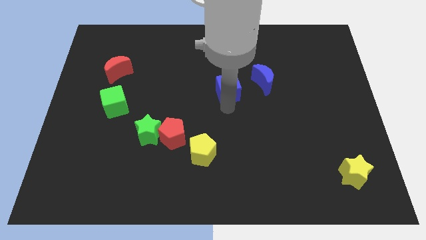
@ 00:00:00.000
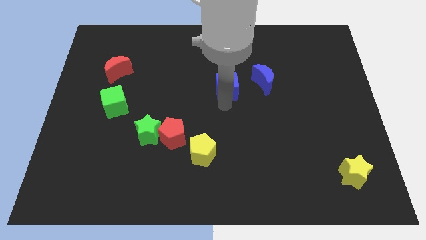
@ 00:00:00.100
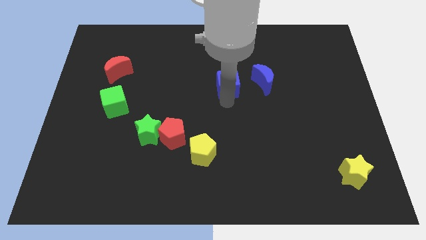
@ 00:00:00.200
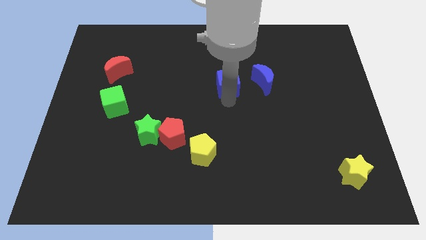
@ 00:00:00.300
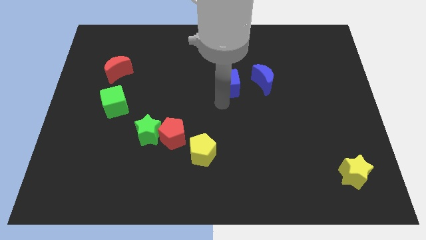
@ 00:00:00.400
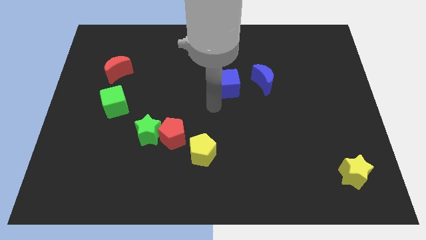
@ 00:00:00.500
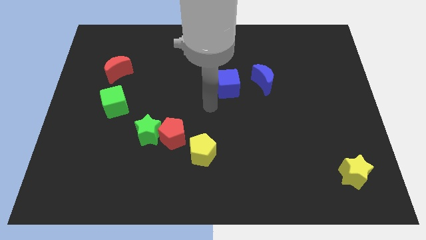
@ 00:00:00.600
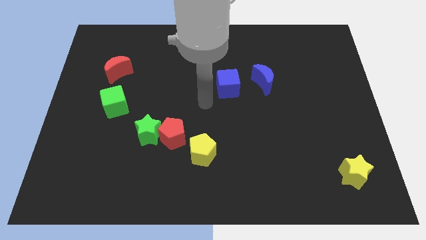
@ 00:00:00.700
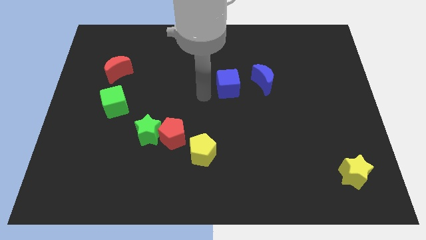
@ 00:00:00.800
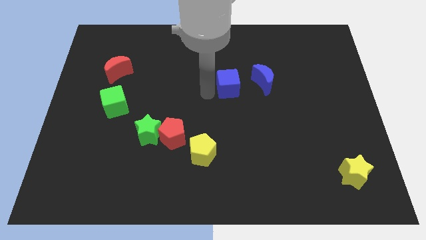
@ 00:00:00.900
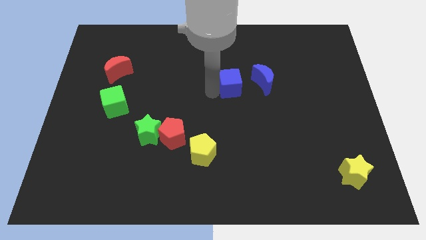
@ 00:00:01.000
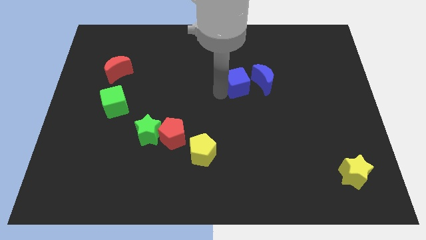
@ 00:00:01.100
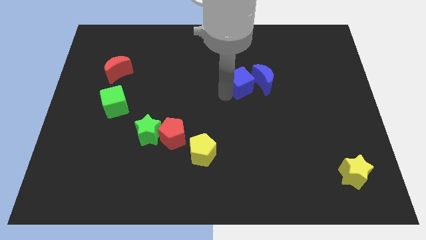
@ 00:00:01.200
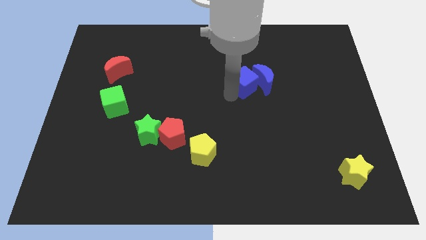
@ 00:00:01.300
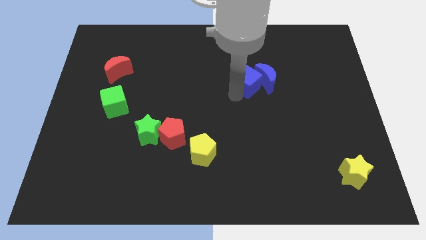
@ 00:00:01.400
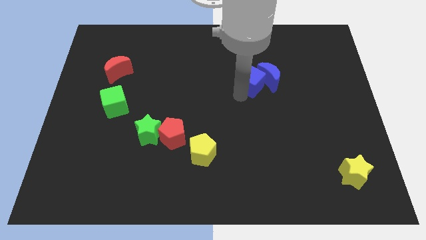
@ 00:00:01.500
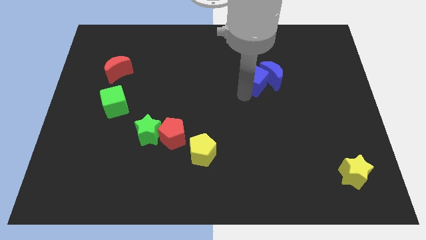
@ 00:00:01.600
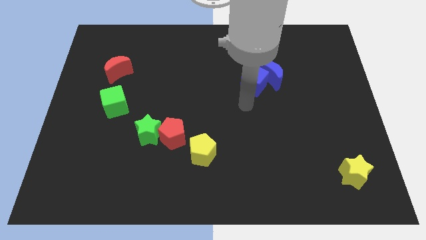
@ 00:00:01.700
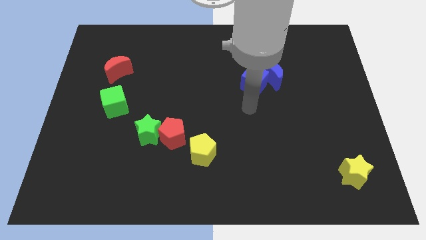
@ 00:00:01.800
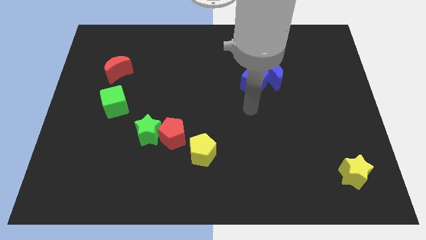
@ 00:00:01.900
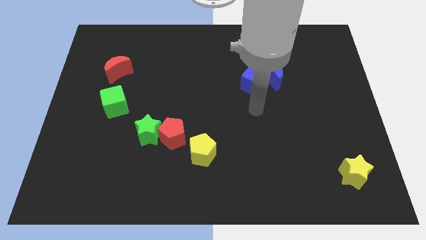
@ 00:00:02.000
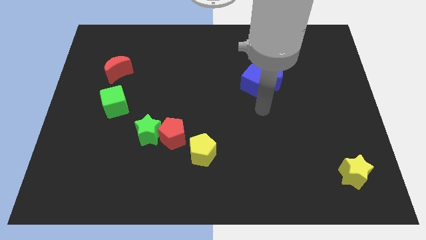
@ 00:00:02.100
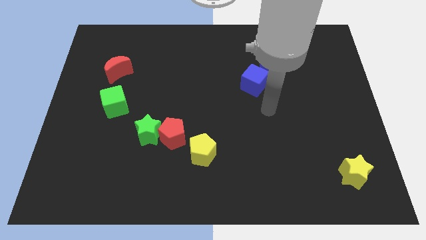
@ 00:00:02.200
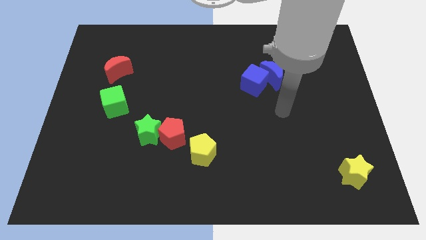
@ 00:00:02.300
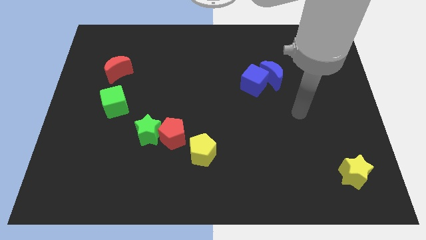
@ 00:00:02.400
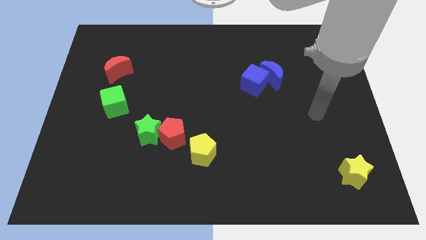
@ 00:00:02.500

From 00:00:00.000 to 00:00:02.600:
push the blue cube into the blue moon

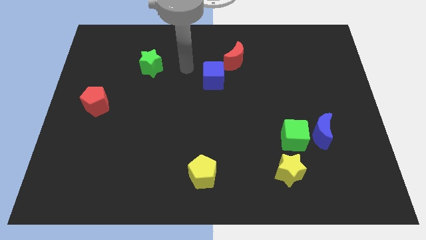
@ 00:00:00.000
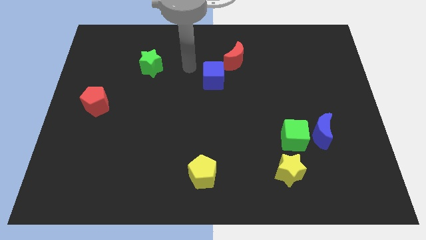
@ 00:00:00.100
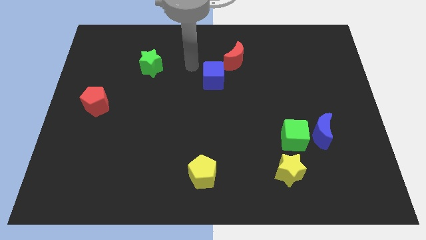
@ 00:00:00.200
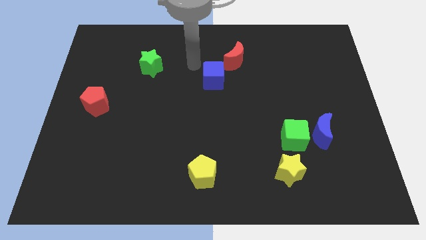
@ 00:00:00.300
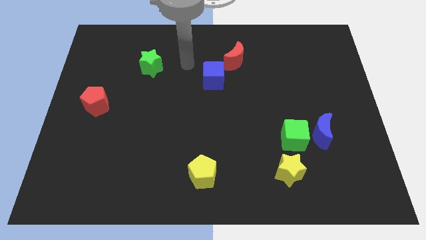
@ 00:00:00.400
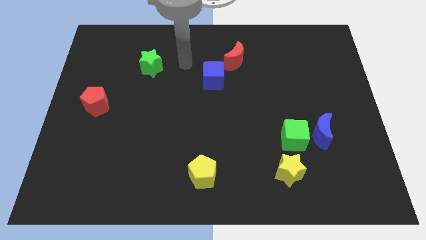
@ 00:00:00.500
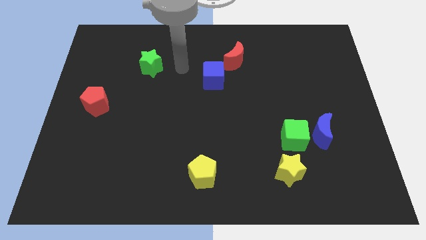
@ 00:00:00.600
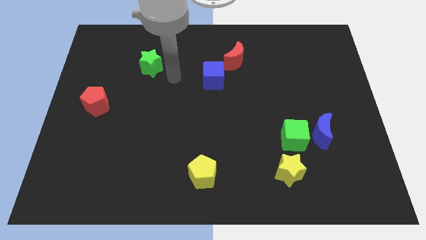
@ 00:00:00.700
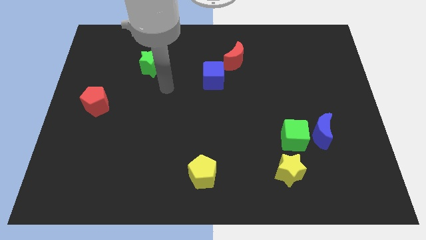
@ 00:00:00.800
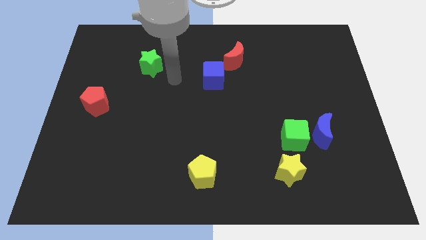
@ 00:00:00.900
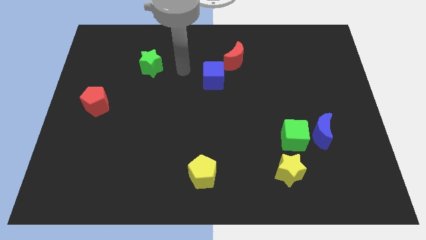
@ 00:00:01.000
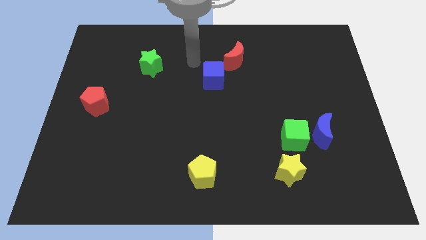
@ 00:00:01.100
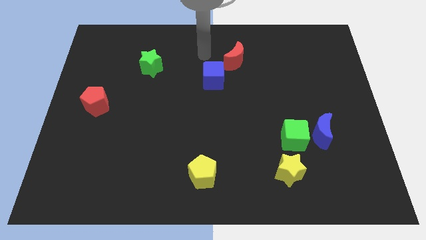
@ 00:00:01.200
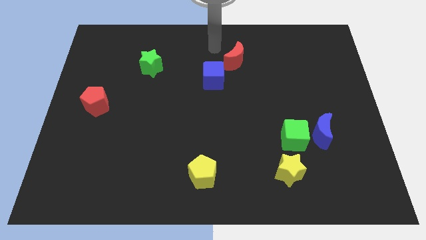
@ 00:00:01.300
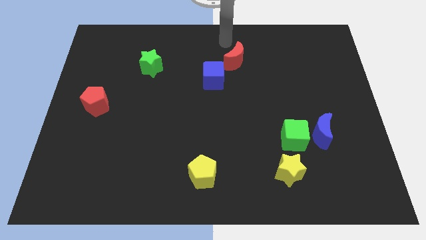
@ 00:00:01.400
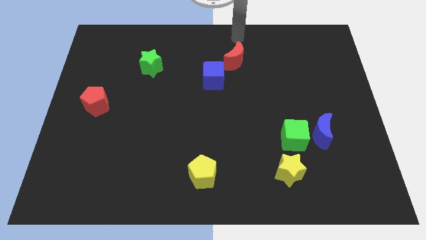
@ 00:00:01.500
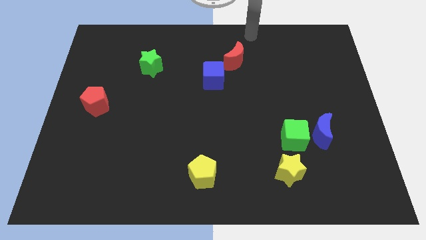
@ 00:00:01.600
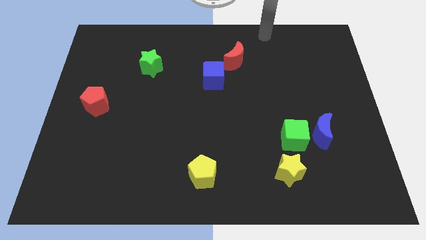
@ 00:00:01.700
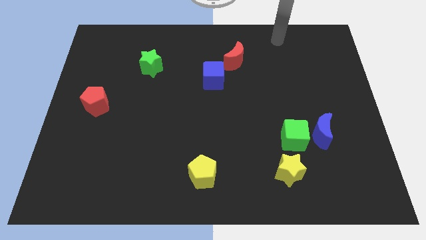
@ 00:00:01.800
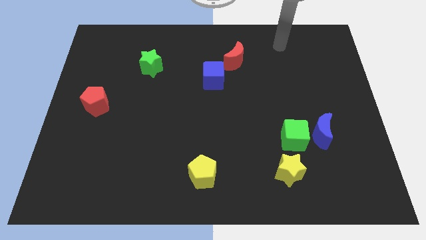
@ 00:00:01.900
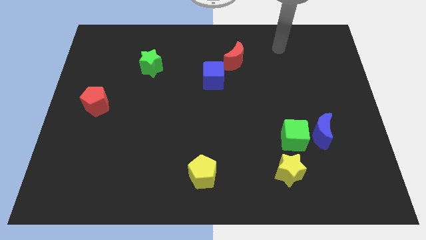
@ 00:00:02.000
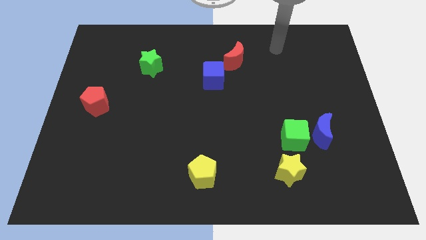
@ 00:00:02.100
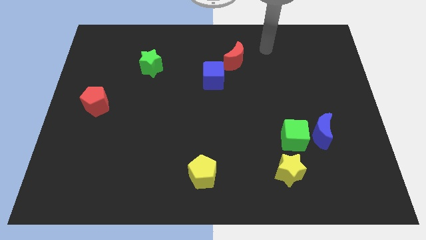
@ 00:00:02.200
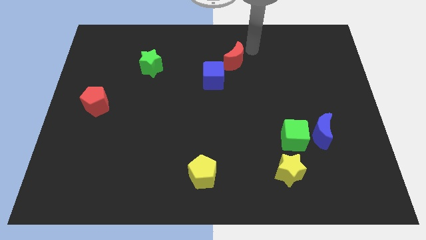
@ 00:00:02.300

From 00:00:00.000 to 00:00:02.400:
move your arm towards the red moon

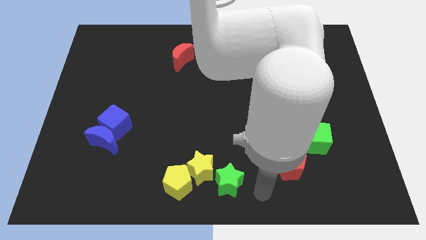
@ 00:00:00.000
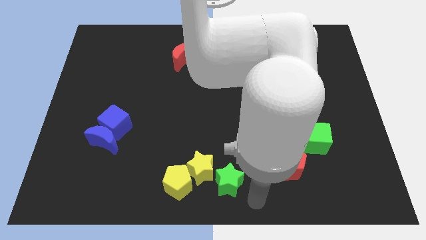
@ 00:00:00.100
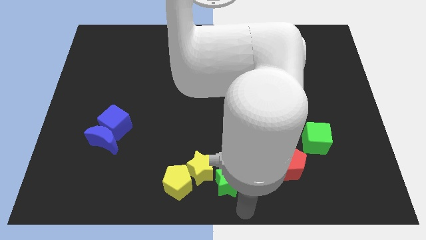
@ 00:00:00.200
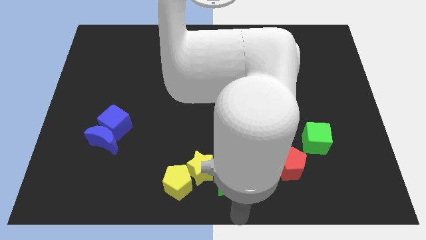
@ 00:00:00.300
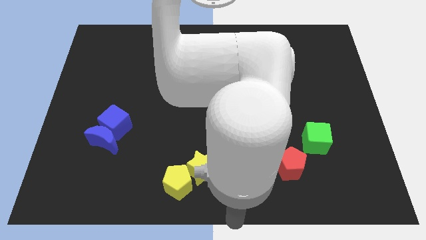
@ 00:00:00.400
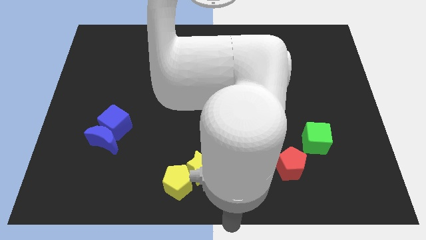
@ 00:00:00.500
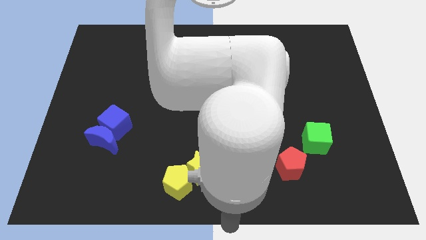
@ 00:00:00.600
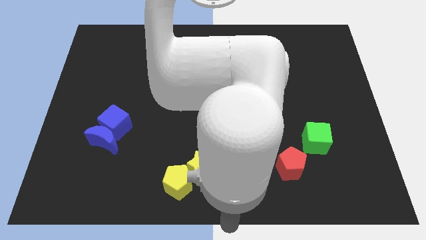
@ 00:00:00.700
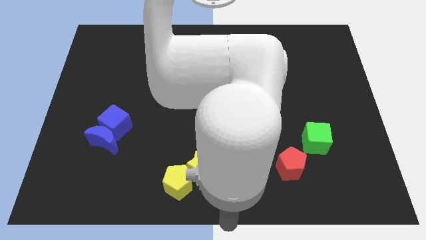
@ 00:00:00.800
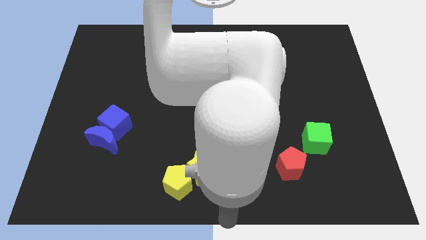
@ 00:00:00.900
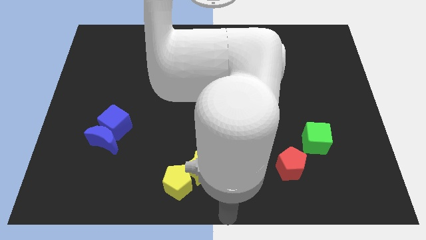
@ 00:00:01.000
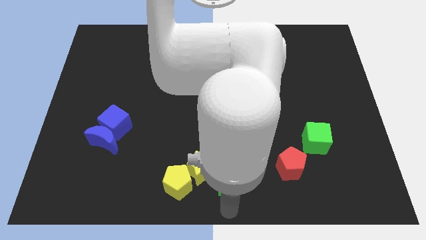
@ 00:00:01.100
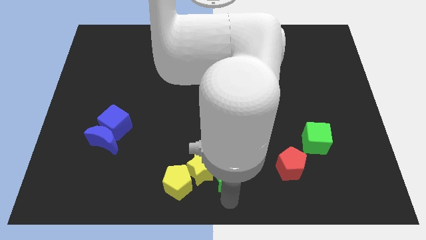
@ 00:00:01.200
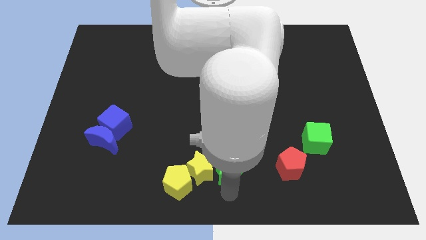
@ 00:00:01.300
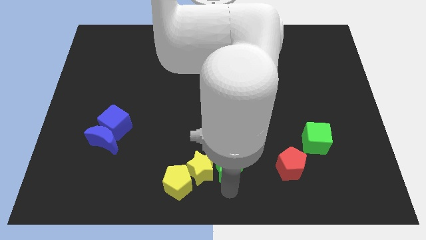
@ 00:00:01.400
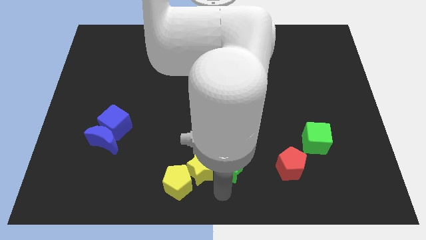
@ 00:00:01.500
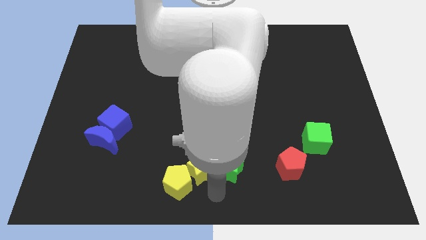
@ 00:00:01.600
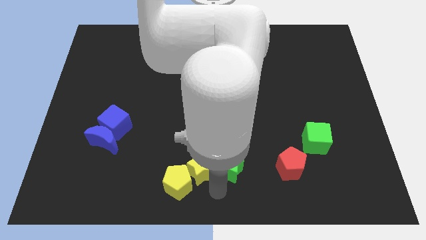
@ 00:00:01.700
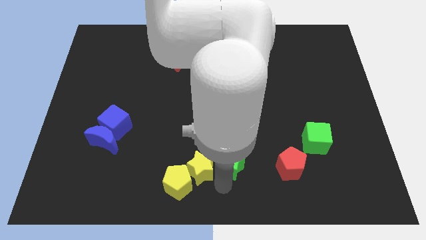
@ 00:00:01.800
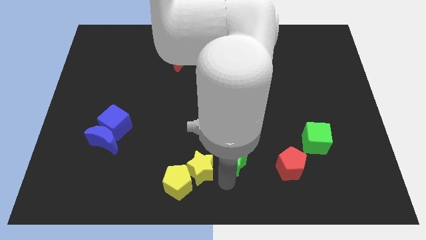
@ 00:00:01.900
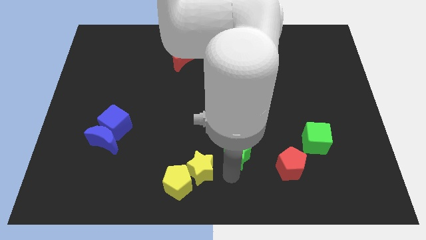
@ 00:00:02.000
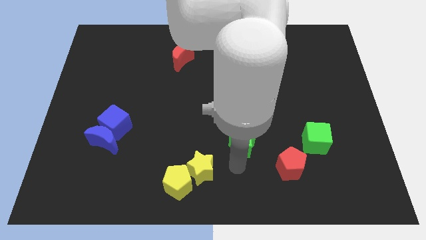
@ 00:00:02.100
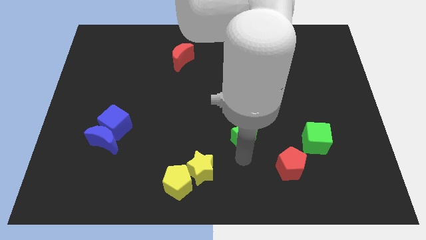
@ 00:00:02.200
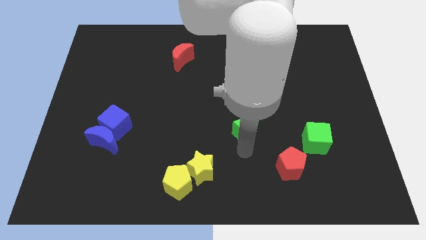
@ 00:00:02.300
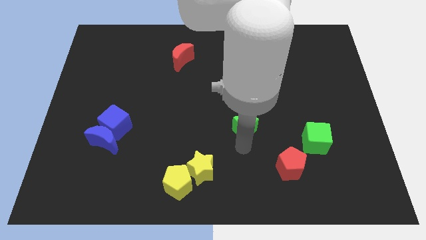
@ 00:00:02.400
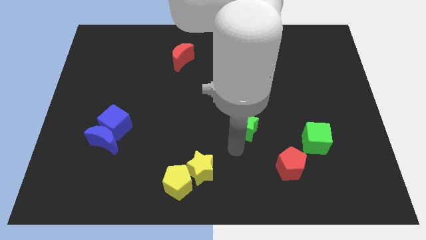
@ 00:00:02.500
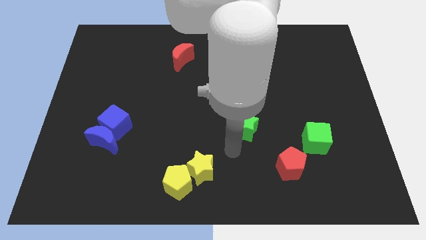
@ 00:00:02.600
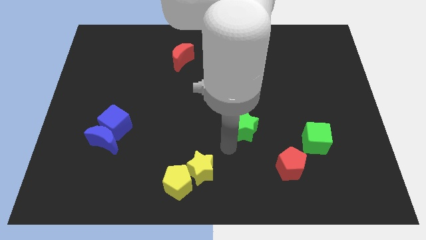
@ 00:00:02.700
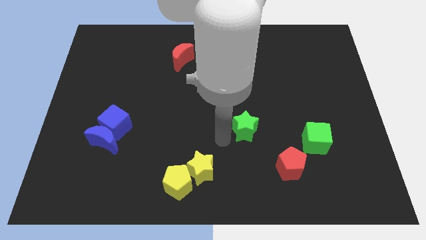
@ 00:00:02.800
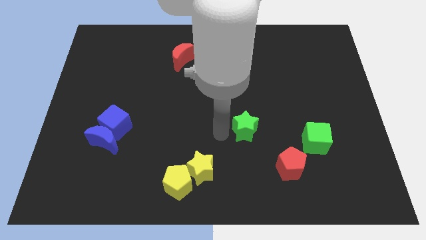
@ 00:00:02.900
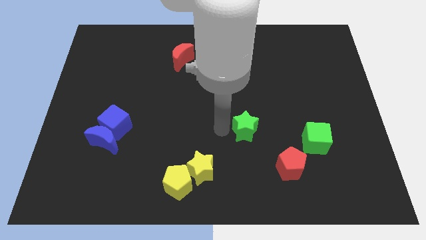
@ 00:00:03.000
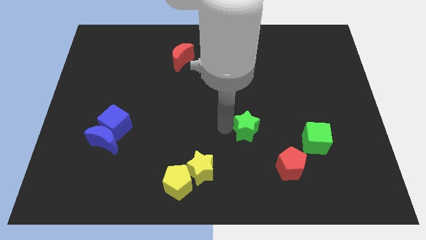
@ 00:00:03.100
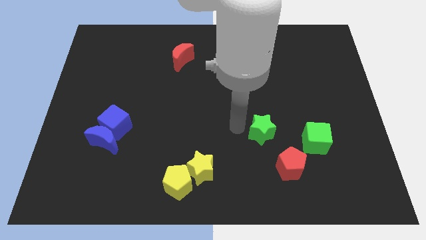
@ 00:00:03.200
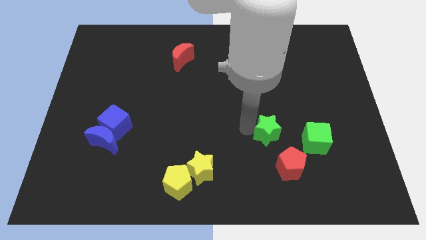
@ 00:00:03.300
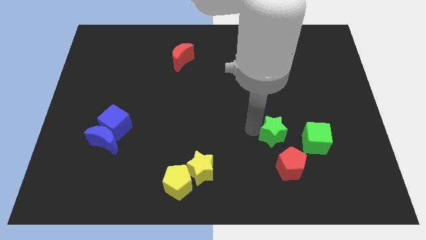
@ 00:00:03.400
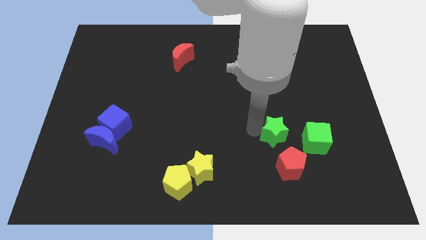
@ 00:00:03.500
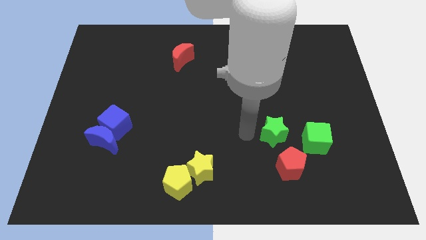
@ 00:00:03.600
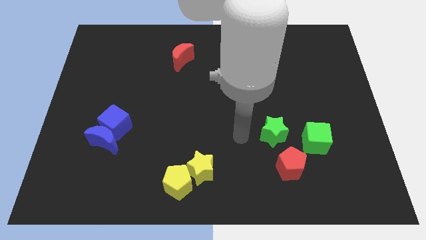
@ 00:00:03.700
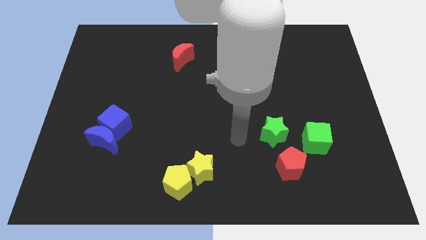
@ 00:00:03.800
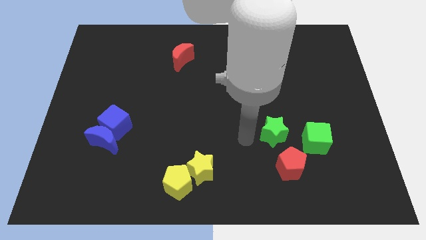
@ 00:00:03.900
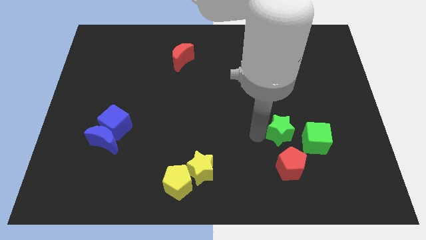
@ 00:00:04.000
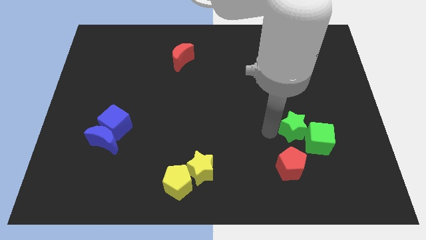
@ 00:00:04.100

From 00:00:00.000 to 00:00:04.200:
place the green star above the red pentagon
